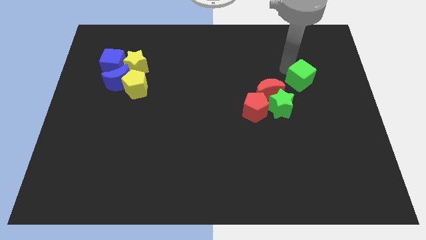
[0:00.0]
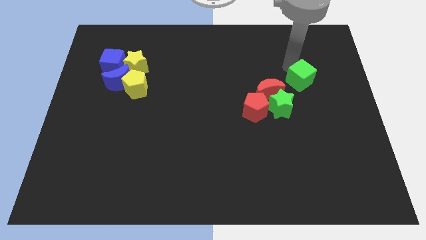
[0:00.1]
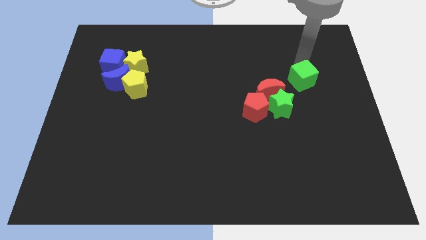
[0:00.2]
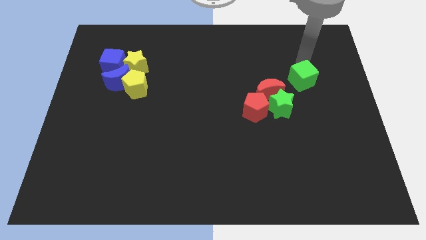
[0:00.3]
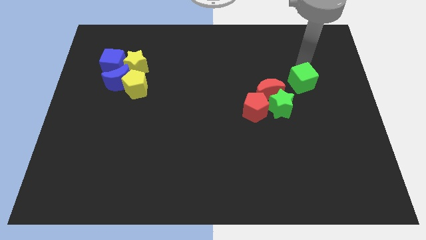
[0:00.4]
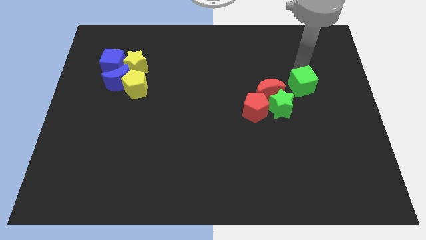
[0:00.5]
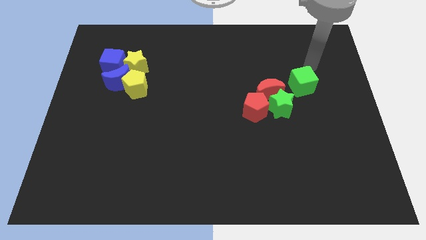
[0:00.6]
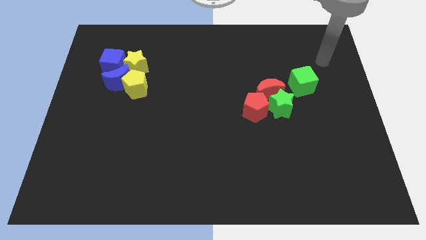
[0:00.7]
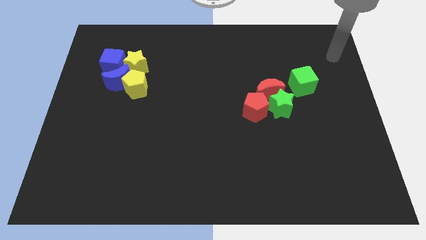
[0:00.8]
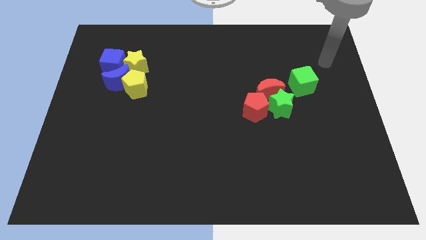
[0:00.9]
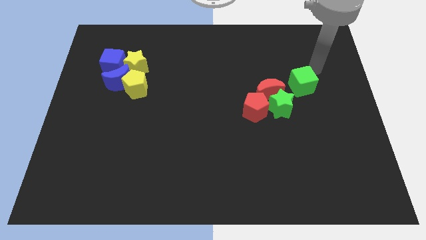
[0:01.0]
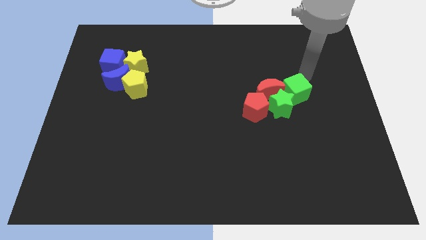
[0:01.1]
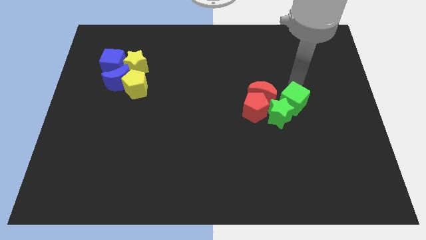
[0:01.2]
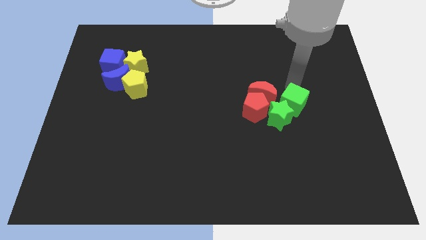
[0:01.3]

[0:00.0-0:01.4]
push the green cube towards the top of the green star

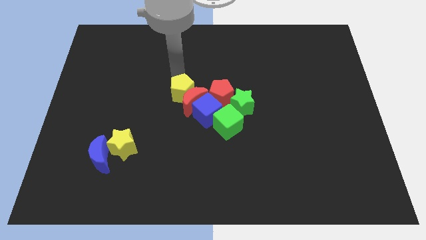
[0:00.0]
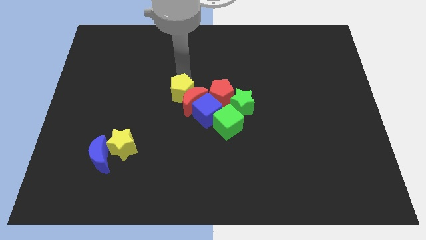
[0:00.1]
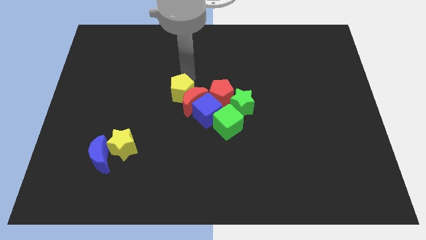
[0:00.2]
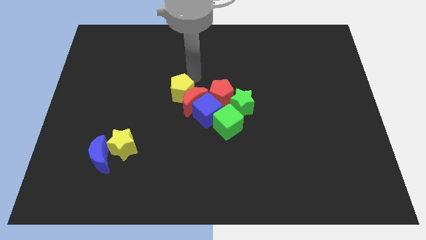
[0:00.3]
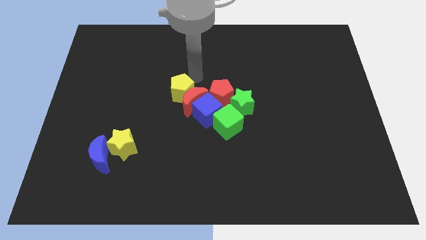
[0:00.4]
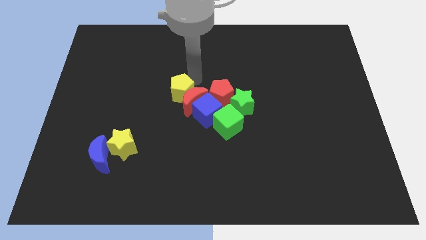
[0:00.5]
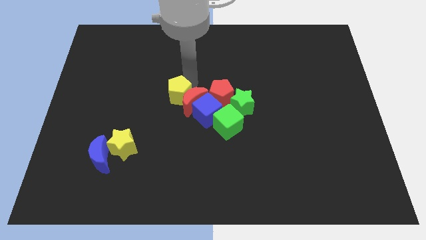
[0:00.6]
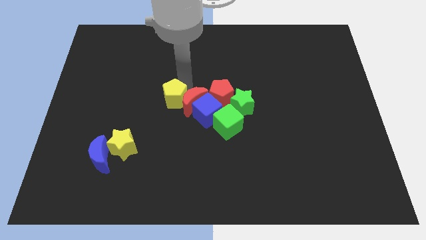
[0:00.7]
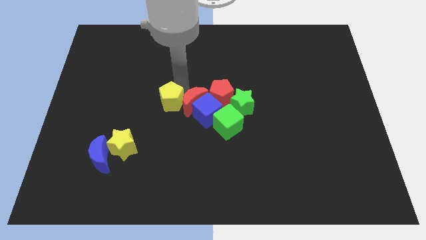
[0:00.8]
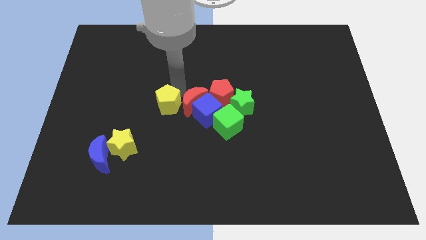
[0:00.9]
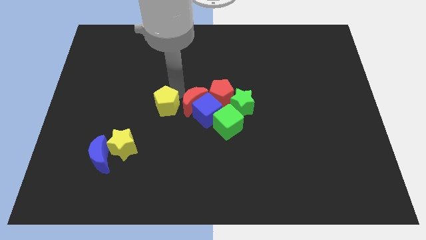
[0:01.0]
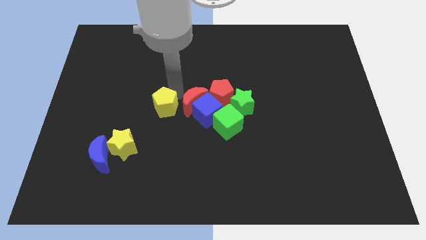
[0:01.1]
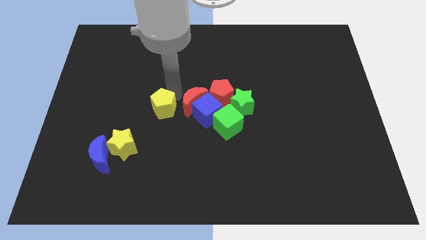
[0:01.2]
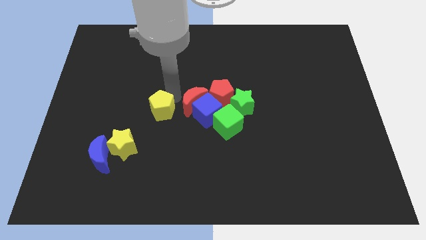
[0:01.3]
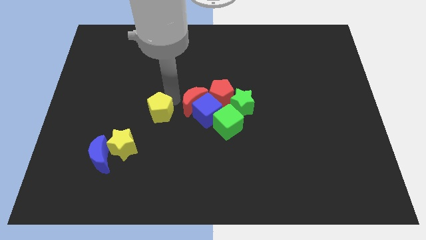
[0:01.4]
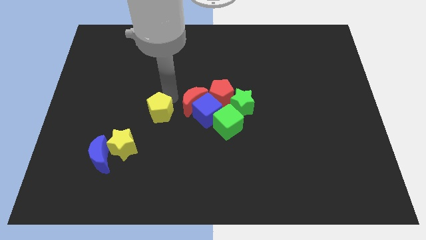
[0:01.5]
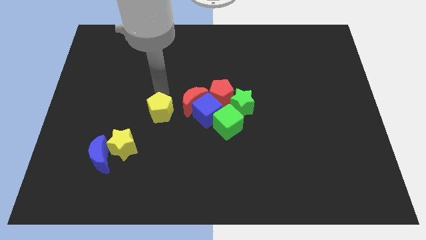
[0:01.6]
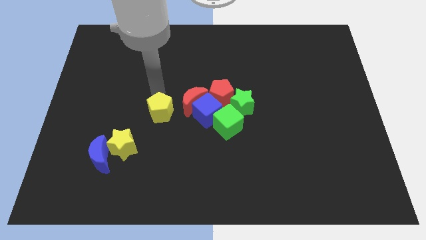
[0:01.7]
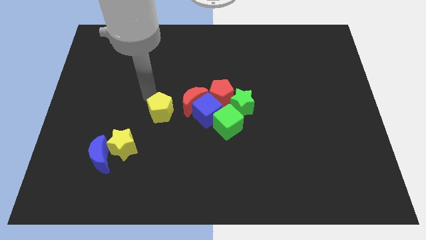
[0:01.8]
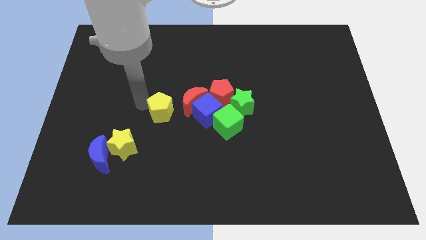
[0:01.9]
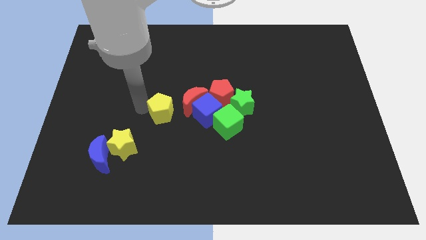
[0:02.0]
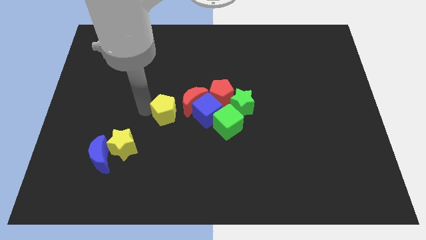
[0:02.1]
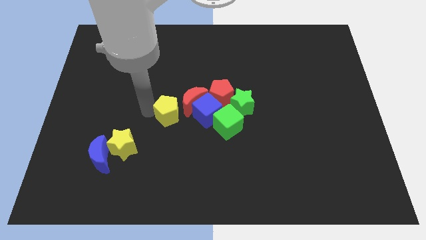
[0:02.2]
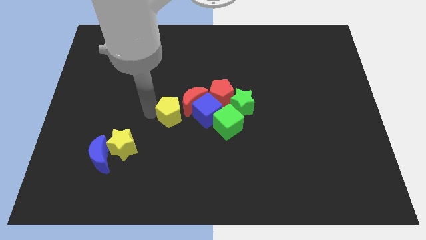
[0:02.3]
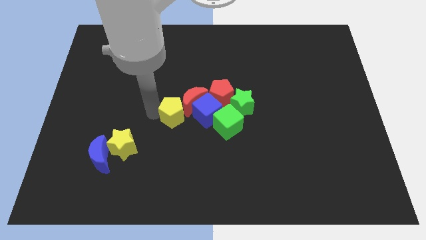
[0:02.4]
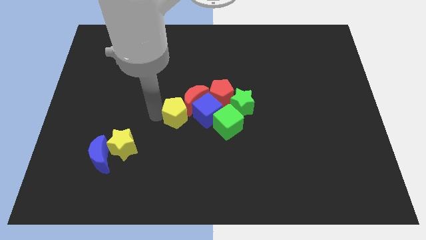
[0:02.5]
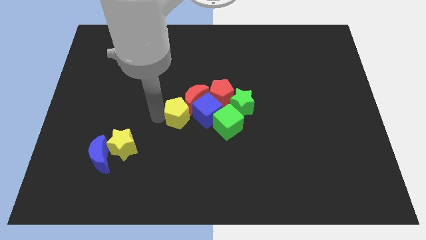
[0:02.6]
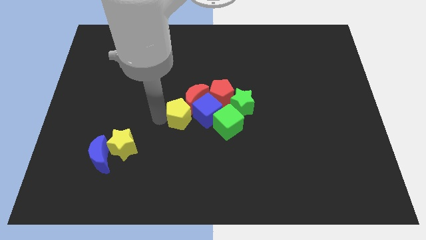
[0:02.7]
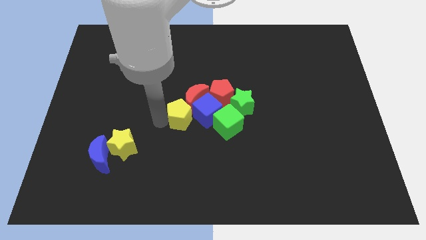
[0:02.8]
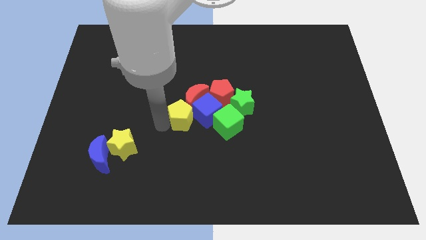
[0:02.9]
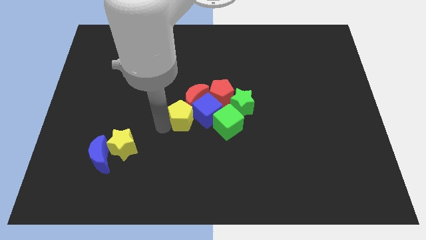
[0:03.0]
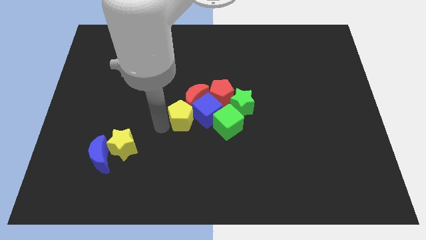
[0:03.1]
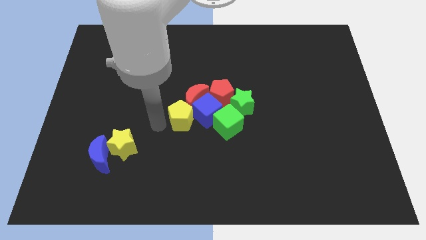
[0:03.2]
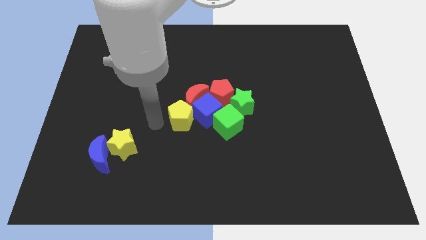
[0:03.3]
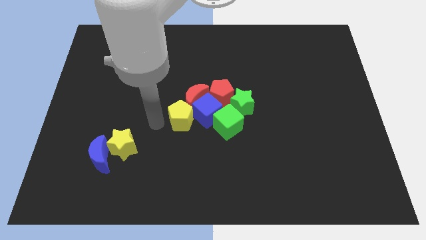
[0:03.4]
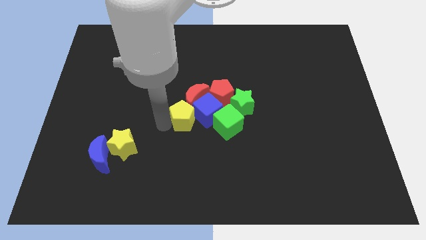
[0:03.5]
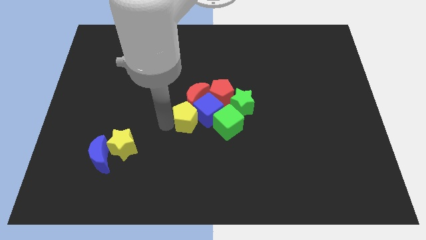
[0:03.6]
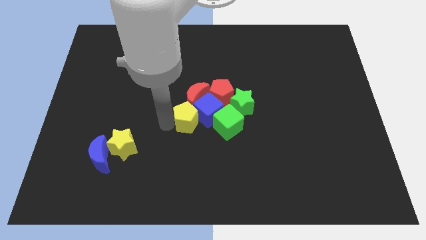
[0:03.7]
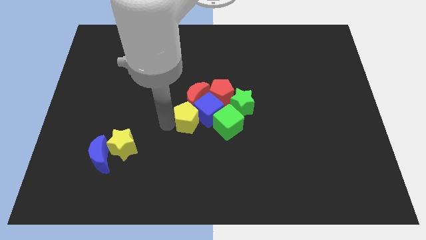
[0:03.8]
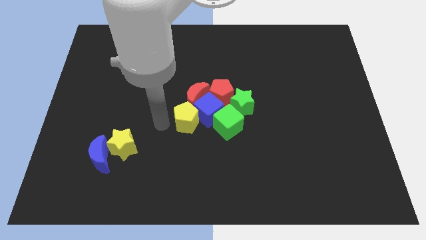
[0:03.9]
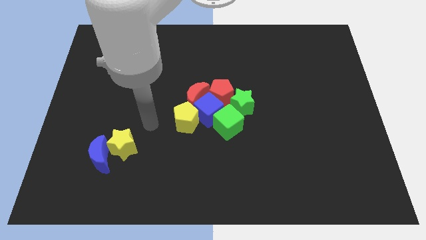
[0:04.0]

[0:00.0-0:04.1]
push the yellow pentagon to the bottom left of the blue cube

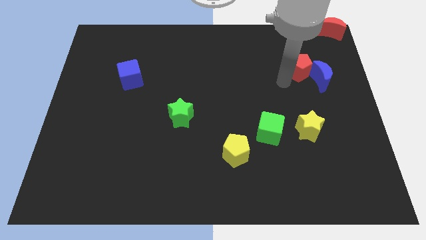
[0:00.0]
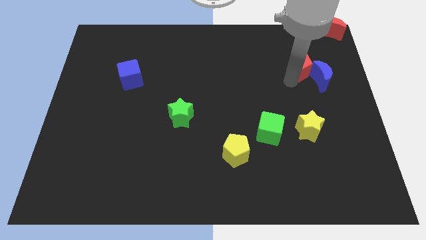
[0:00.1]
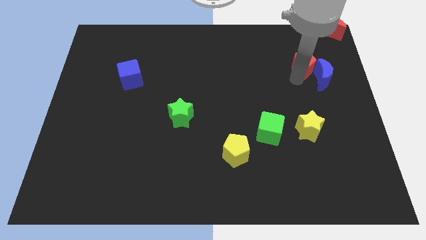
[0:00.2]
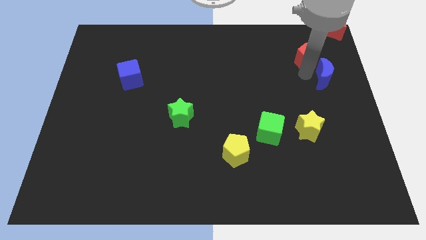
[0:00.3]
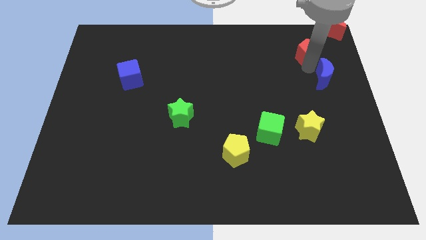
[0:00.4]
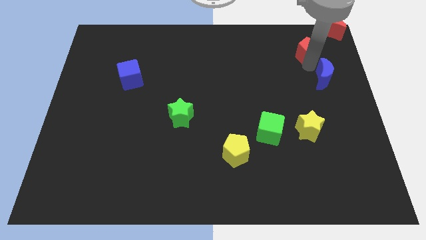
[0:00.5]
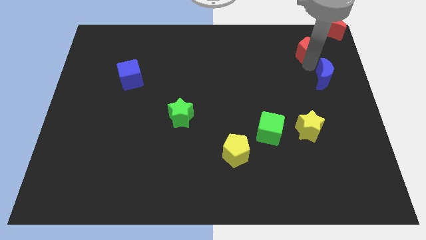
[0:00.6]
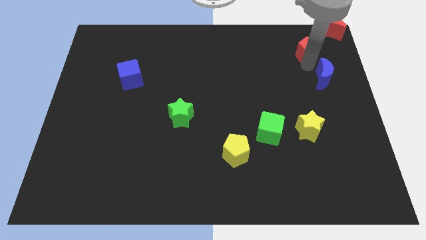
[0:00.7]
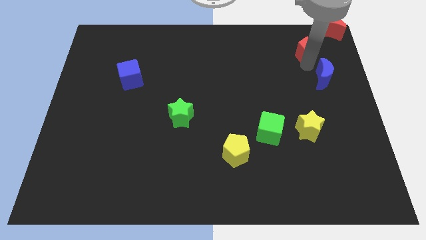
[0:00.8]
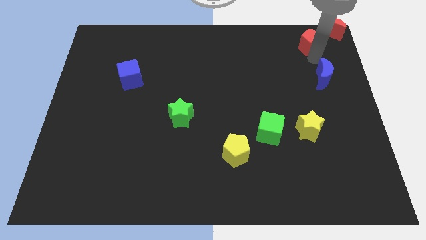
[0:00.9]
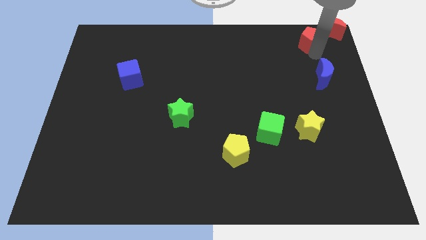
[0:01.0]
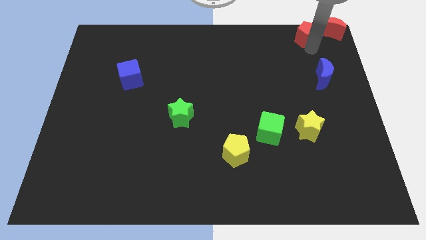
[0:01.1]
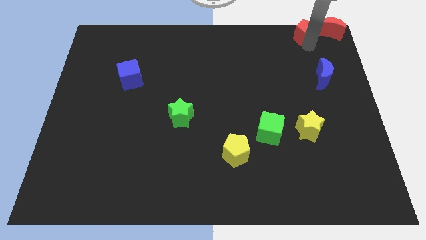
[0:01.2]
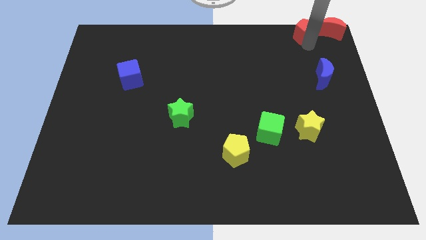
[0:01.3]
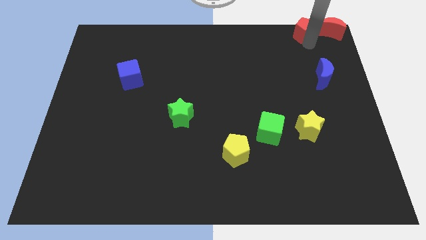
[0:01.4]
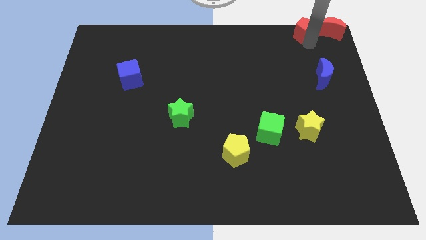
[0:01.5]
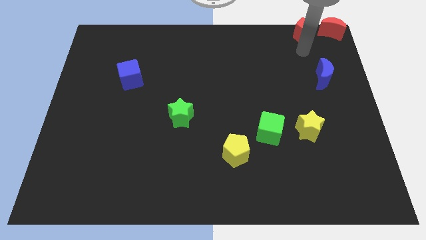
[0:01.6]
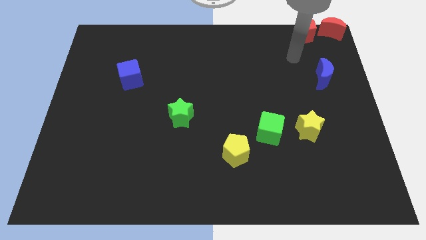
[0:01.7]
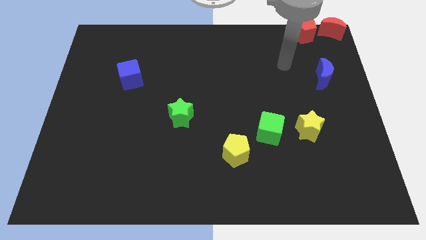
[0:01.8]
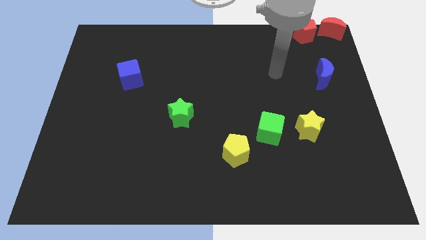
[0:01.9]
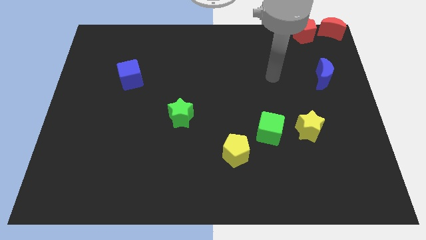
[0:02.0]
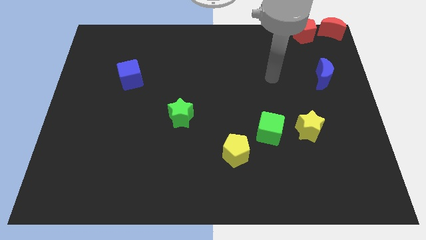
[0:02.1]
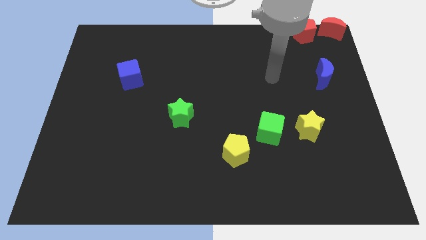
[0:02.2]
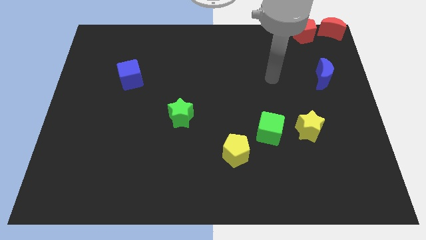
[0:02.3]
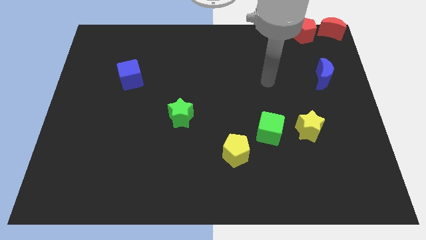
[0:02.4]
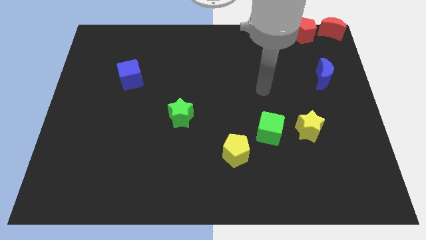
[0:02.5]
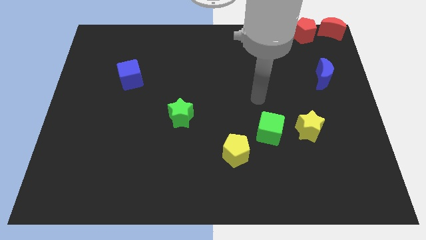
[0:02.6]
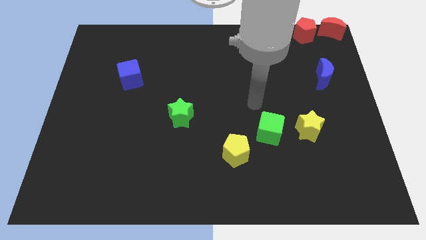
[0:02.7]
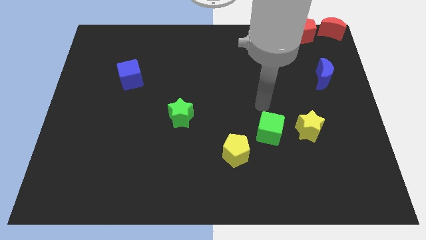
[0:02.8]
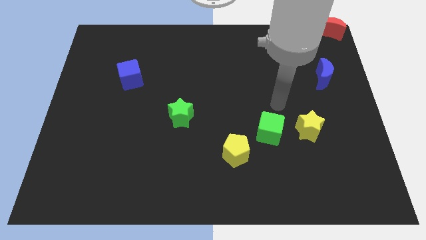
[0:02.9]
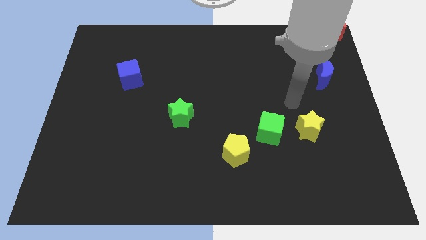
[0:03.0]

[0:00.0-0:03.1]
place the red pentagon left to the red moon
